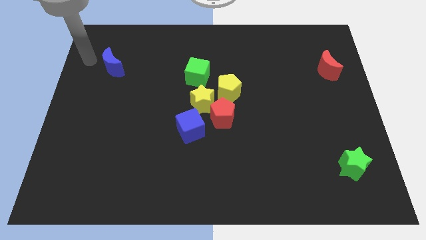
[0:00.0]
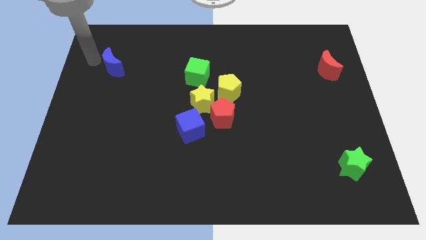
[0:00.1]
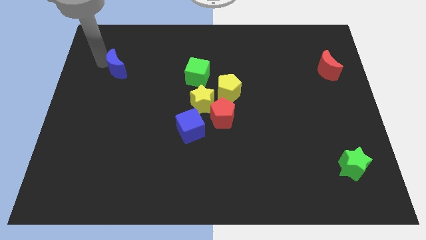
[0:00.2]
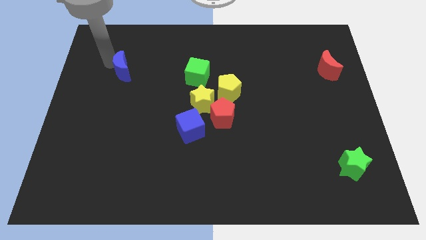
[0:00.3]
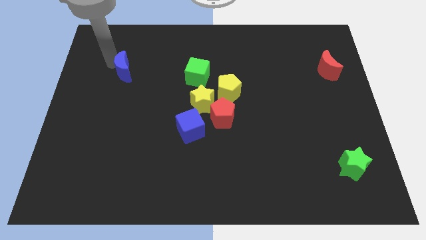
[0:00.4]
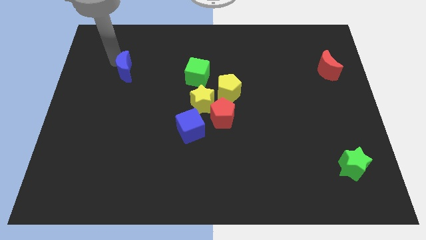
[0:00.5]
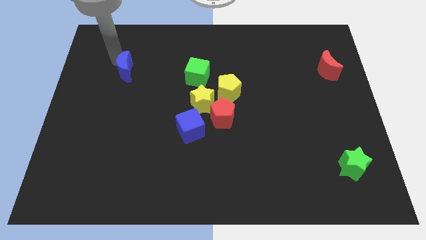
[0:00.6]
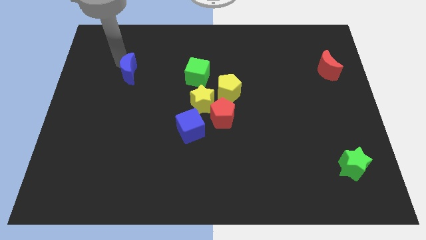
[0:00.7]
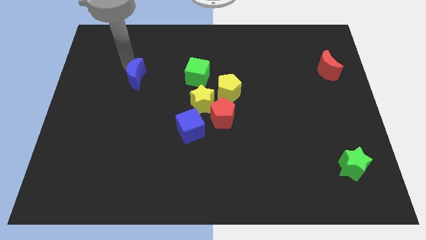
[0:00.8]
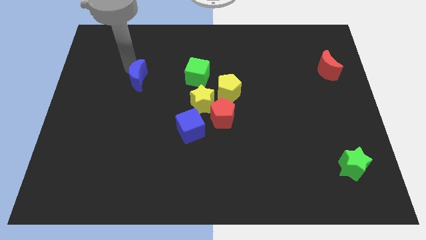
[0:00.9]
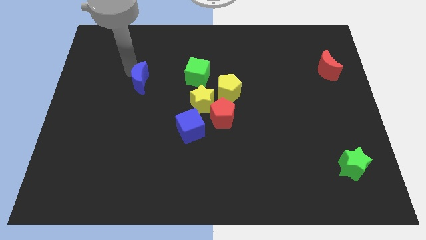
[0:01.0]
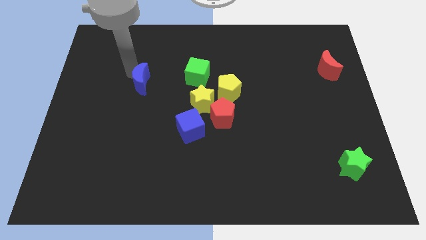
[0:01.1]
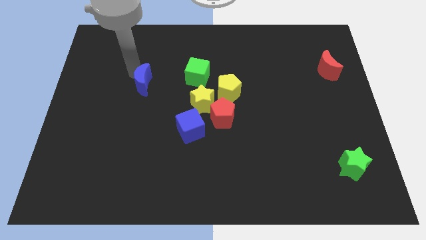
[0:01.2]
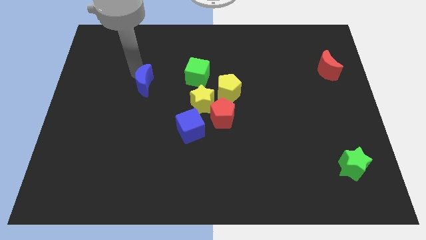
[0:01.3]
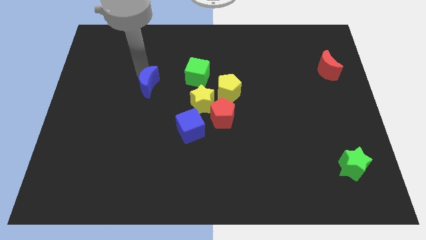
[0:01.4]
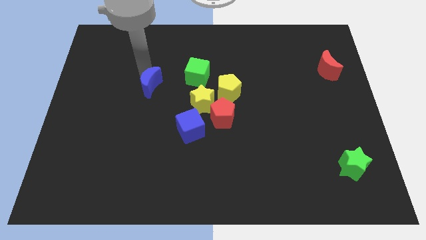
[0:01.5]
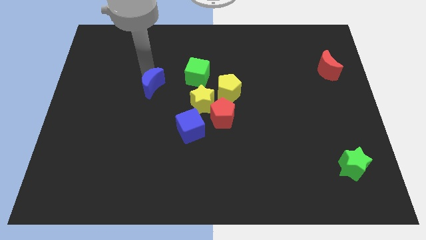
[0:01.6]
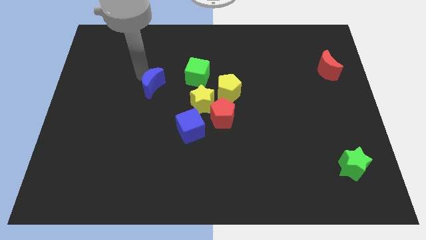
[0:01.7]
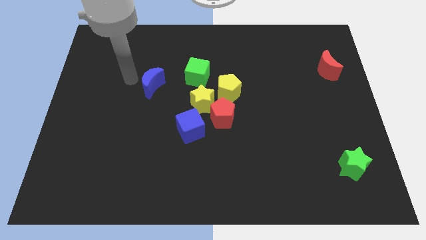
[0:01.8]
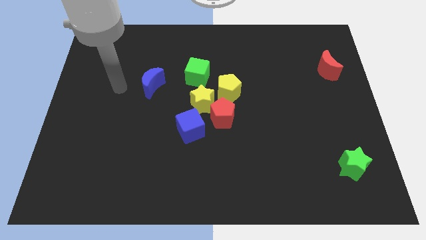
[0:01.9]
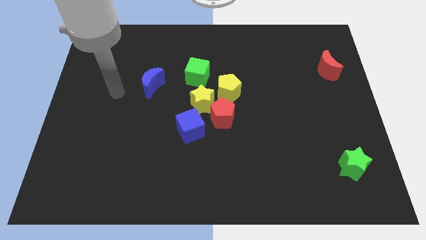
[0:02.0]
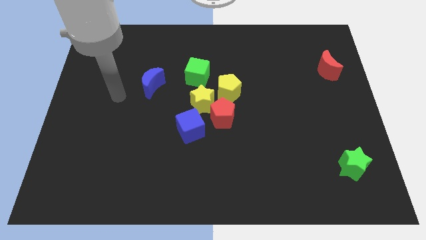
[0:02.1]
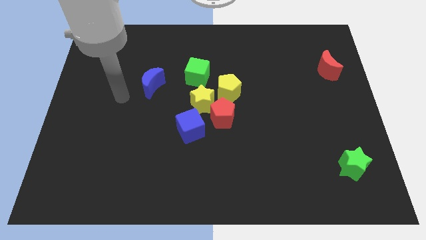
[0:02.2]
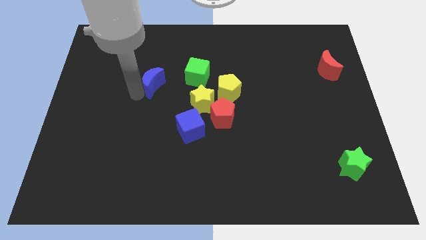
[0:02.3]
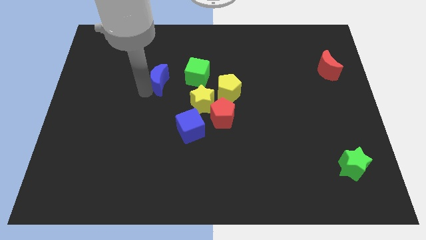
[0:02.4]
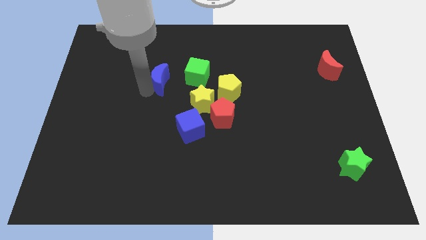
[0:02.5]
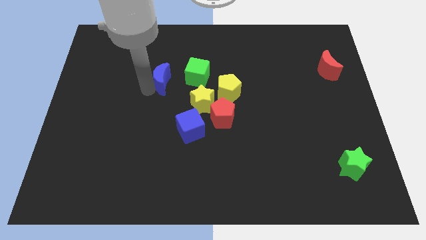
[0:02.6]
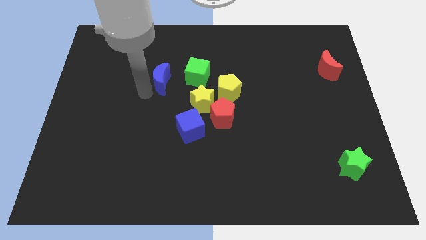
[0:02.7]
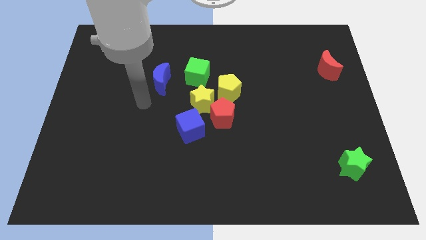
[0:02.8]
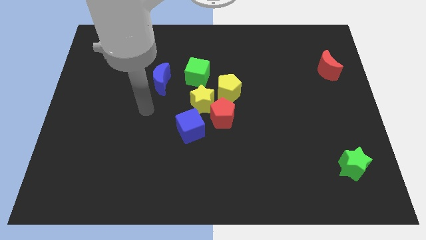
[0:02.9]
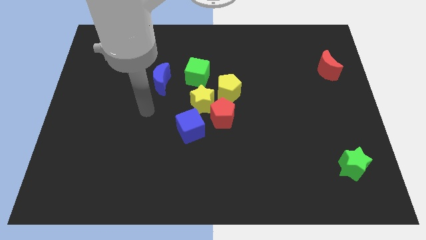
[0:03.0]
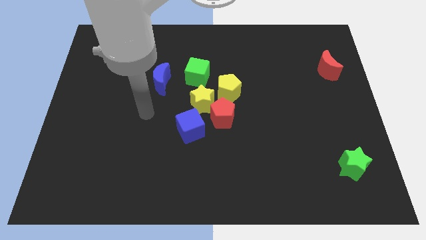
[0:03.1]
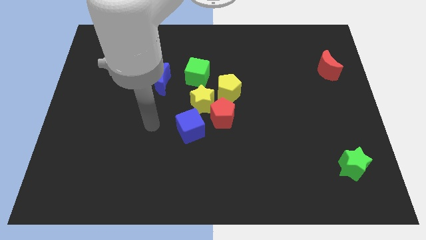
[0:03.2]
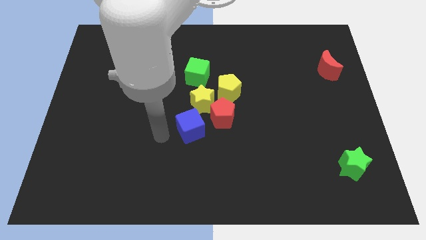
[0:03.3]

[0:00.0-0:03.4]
move blue moon towards green cube

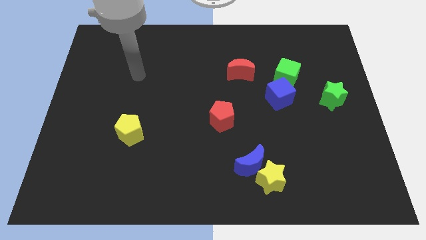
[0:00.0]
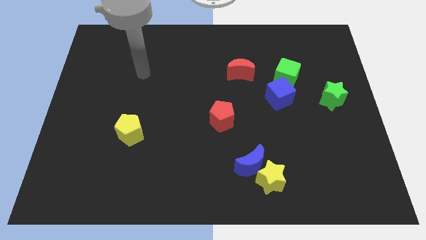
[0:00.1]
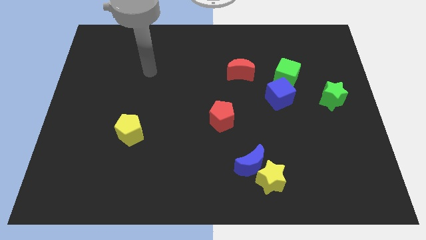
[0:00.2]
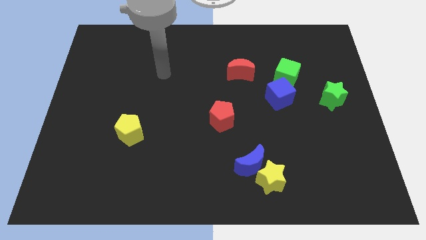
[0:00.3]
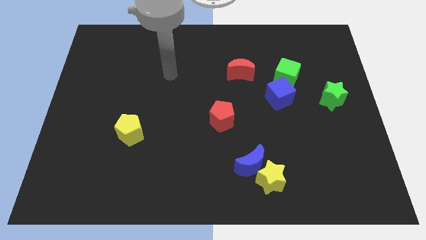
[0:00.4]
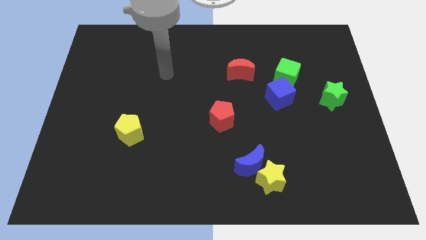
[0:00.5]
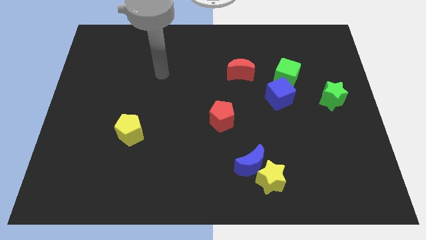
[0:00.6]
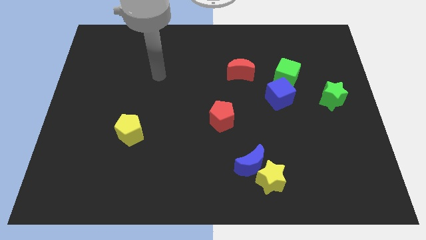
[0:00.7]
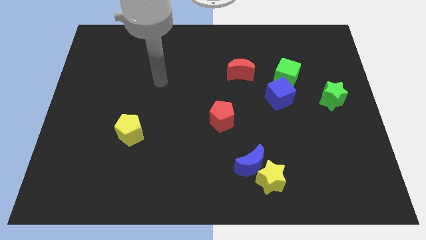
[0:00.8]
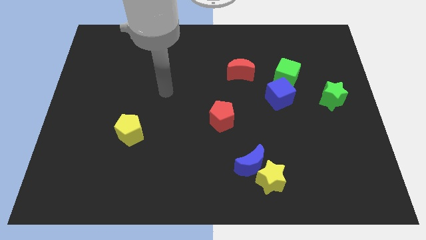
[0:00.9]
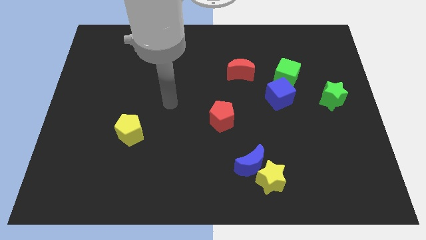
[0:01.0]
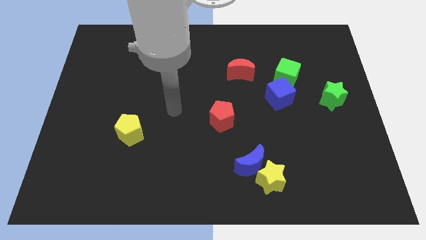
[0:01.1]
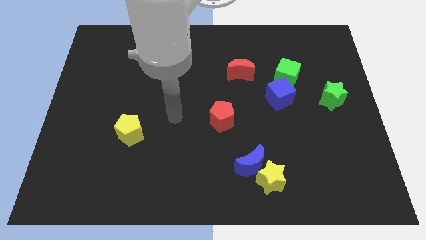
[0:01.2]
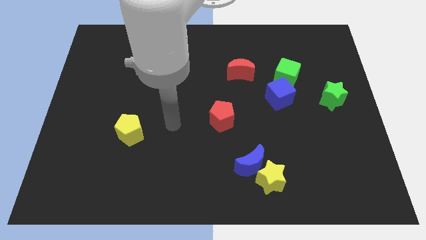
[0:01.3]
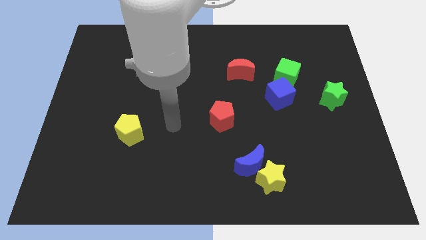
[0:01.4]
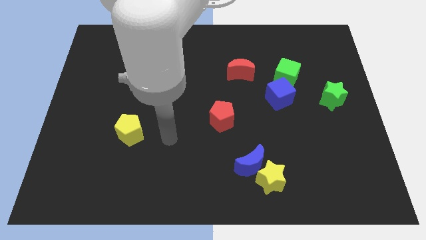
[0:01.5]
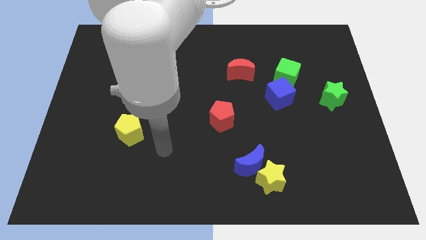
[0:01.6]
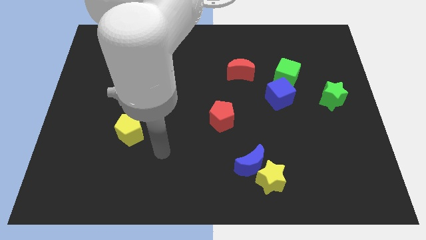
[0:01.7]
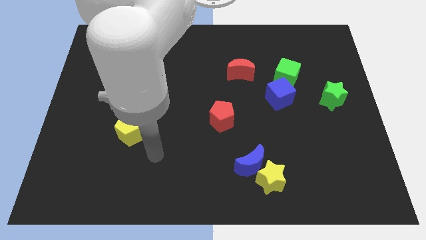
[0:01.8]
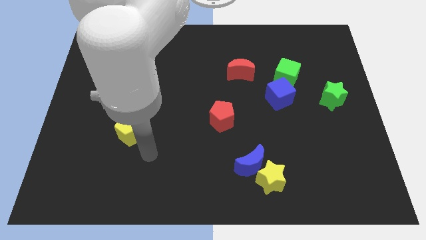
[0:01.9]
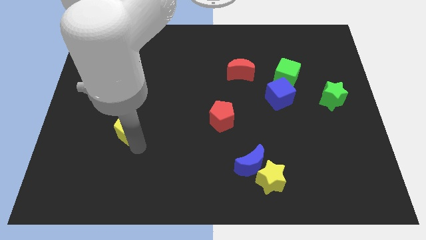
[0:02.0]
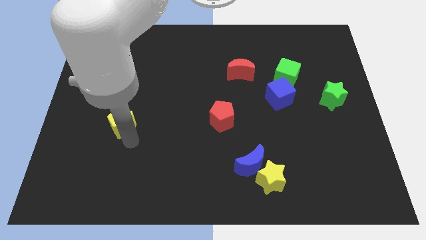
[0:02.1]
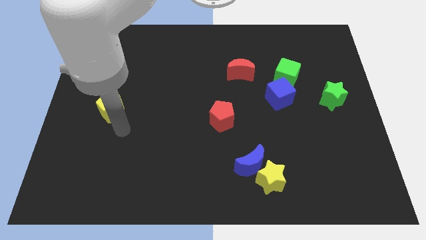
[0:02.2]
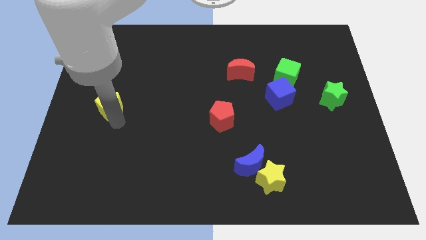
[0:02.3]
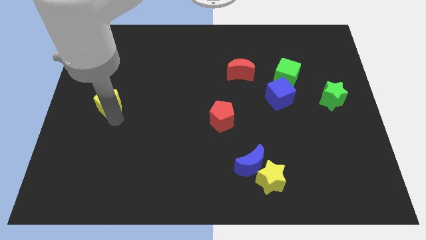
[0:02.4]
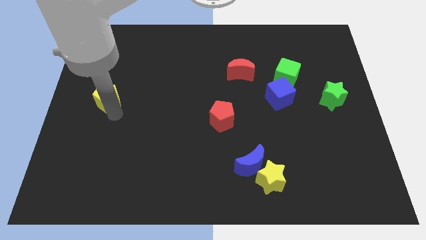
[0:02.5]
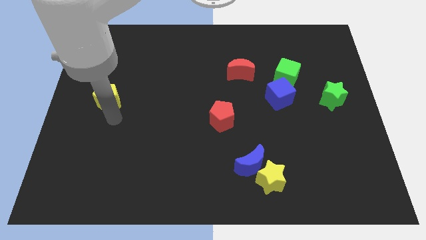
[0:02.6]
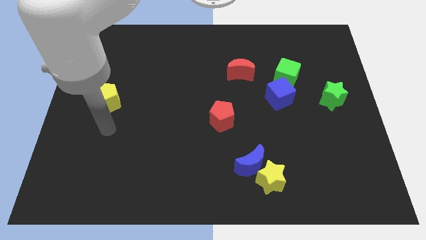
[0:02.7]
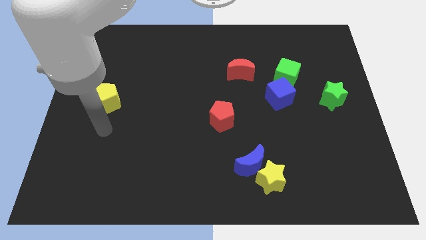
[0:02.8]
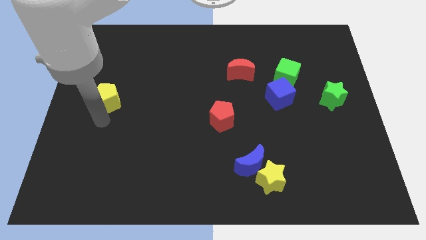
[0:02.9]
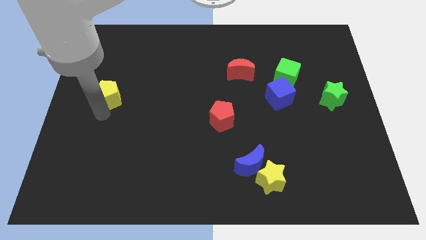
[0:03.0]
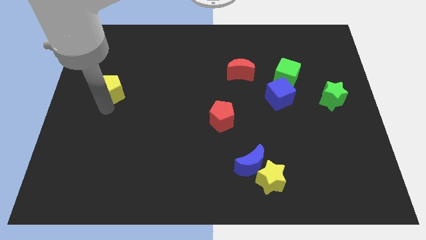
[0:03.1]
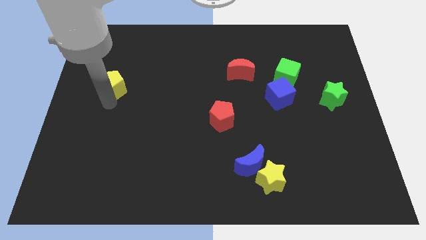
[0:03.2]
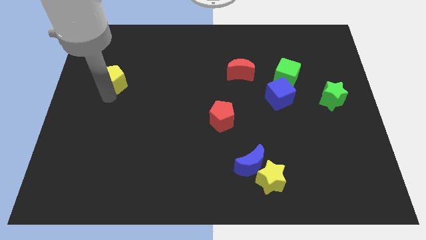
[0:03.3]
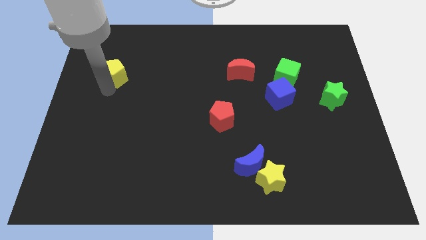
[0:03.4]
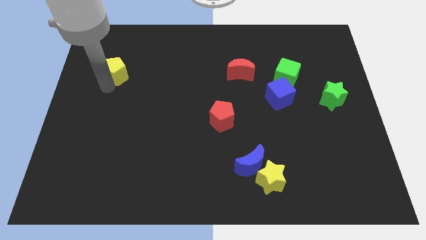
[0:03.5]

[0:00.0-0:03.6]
drag the yellow pentagon parallel to the red moon

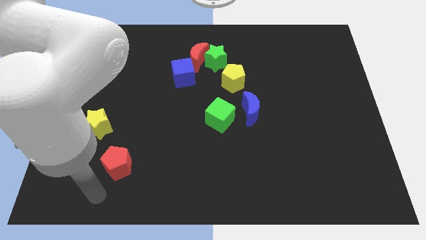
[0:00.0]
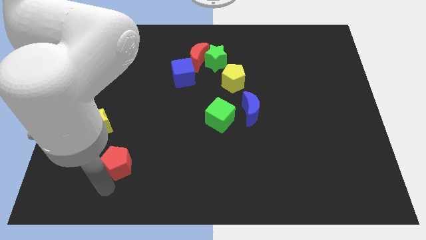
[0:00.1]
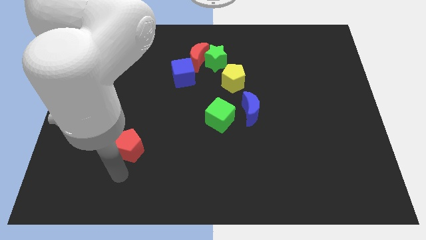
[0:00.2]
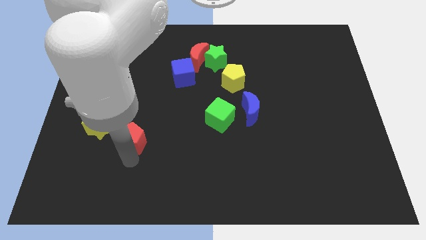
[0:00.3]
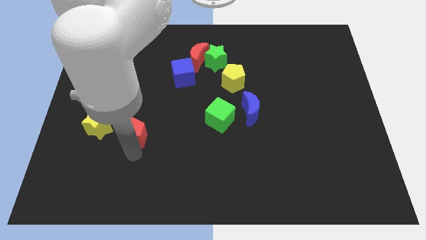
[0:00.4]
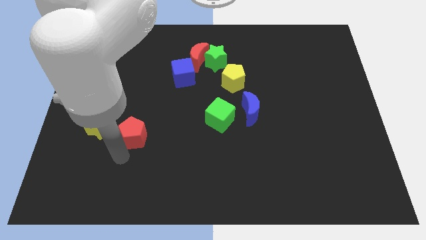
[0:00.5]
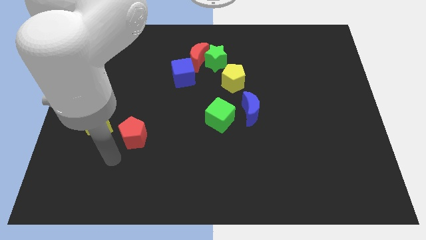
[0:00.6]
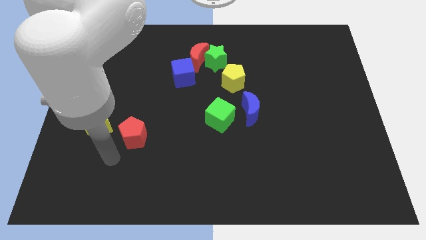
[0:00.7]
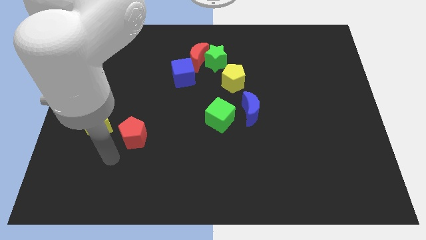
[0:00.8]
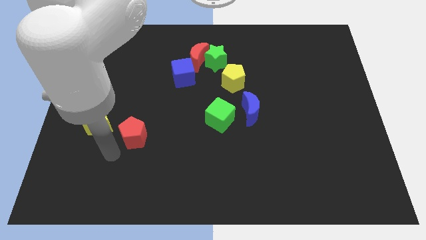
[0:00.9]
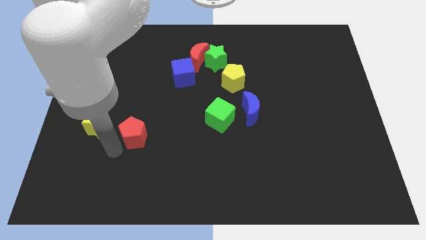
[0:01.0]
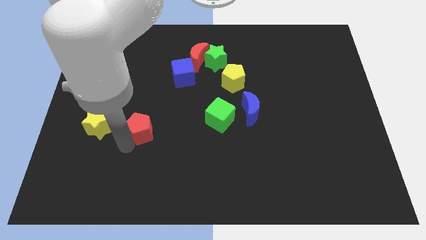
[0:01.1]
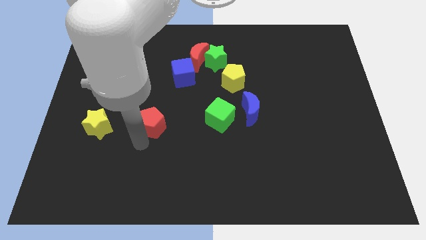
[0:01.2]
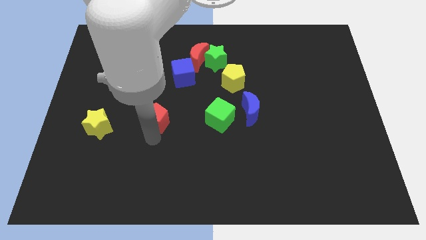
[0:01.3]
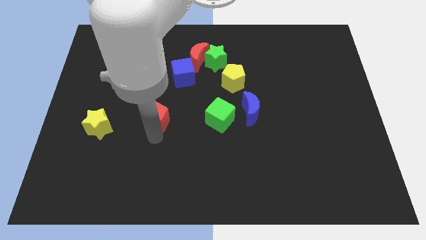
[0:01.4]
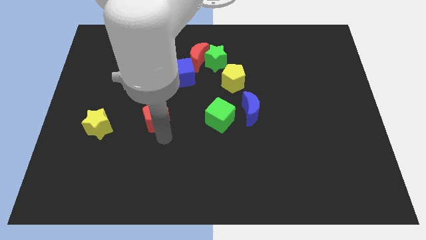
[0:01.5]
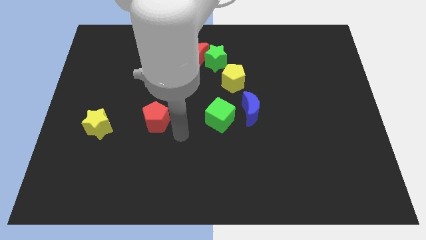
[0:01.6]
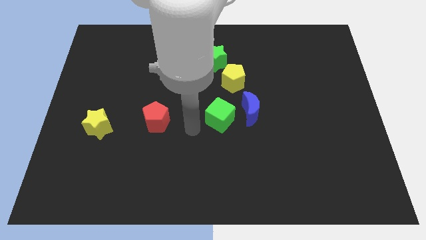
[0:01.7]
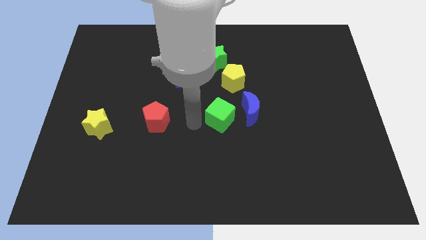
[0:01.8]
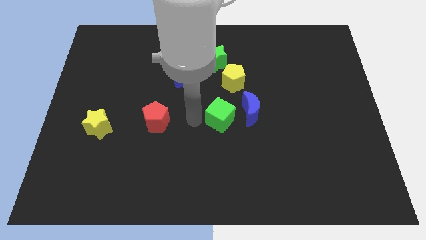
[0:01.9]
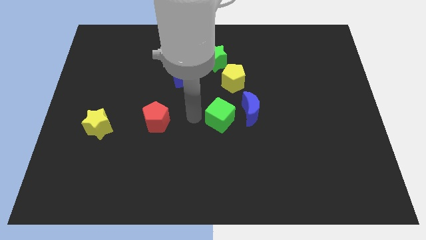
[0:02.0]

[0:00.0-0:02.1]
slide red pentagon to left center
